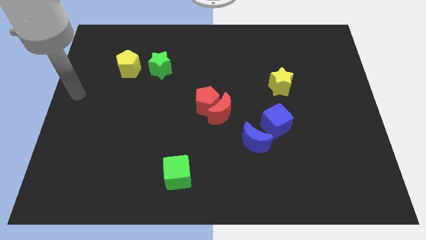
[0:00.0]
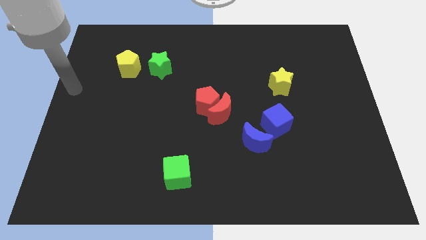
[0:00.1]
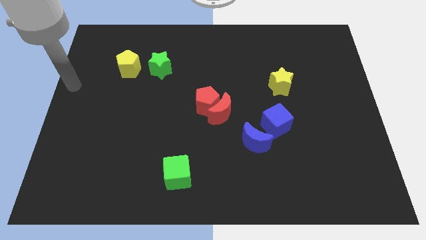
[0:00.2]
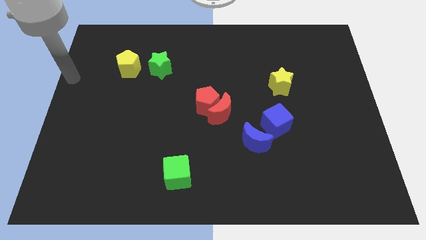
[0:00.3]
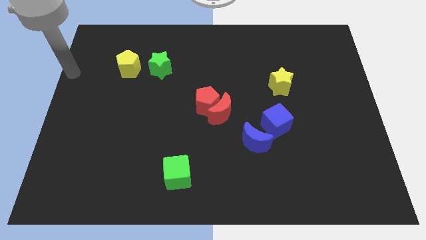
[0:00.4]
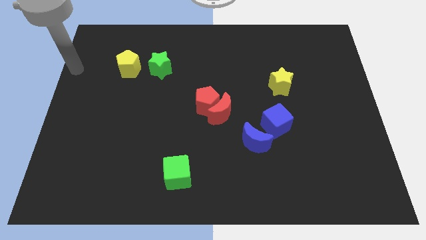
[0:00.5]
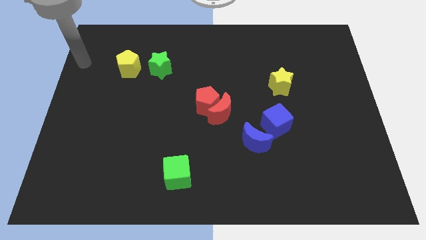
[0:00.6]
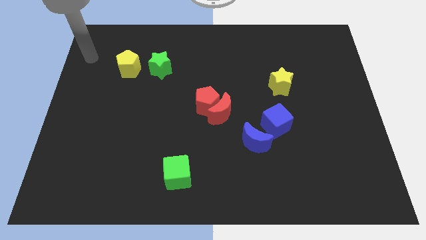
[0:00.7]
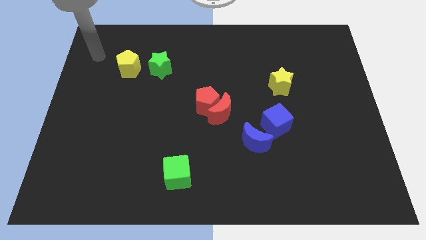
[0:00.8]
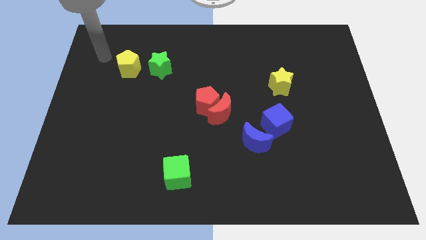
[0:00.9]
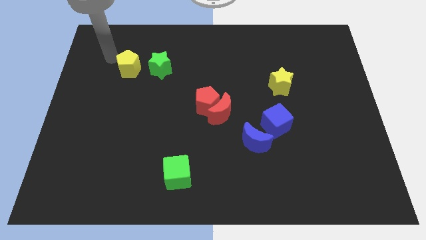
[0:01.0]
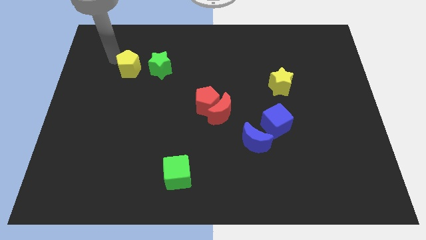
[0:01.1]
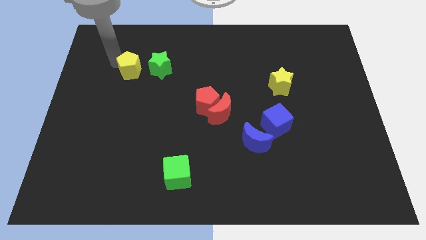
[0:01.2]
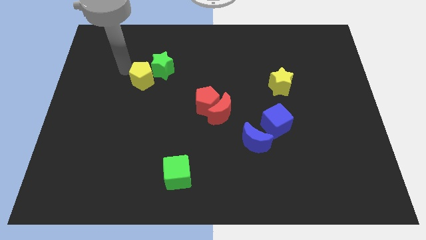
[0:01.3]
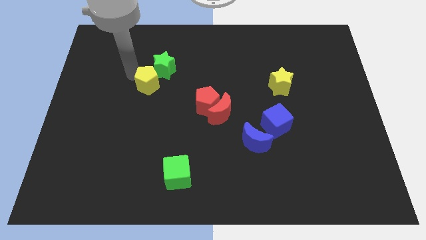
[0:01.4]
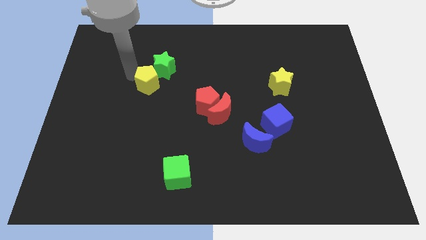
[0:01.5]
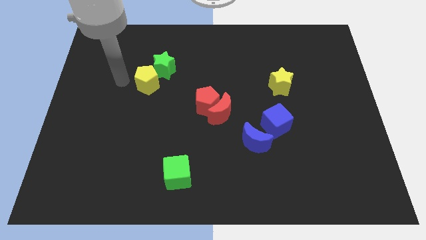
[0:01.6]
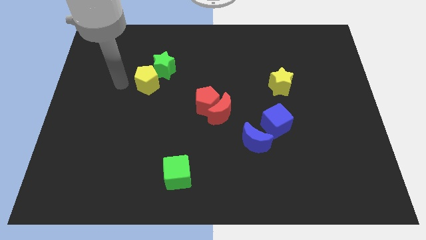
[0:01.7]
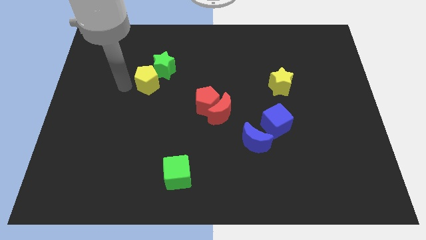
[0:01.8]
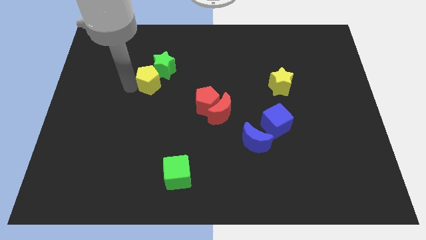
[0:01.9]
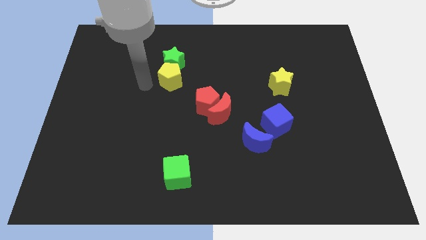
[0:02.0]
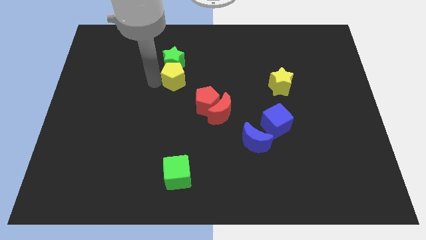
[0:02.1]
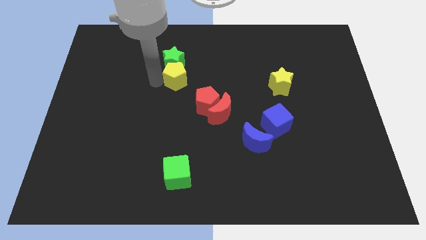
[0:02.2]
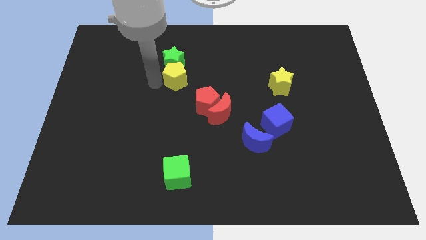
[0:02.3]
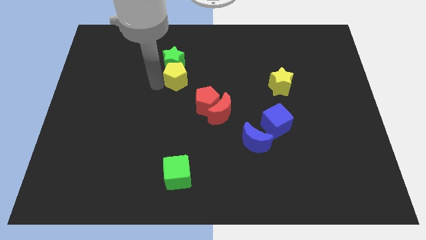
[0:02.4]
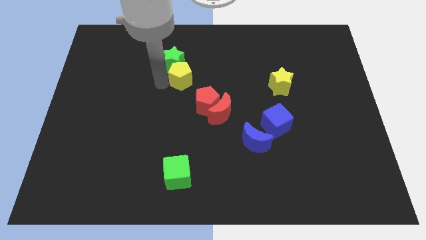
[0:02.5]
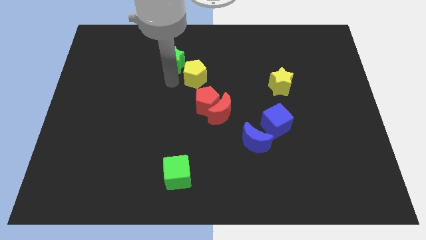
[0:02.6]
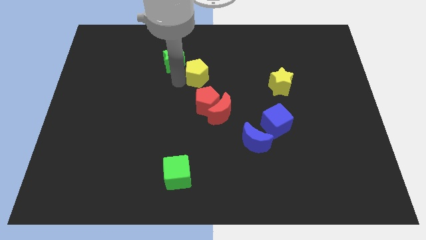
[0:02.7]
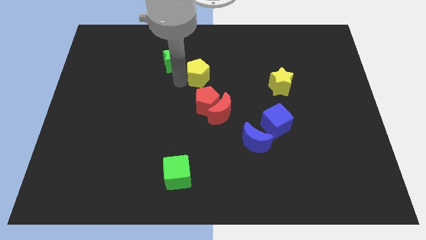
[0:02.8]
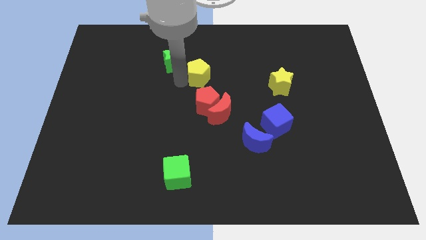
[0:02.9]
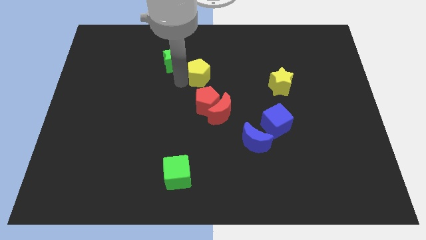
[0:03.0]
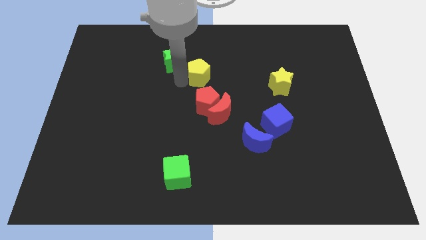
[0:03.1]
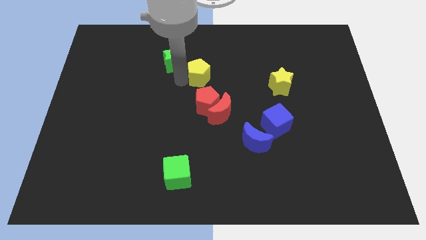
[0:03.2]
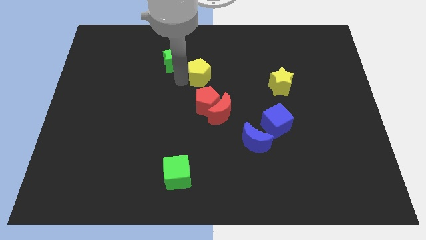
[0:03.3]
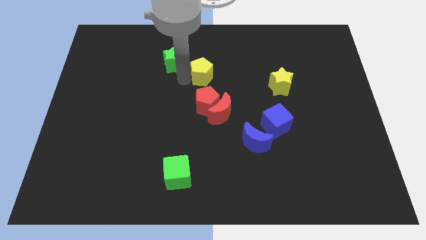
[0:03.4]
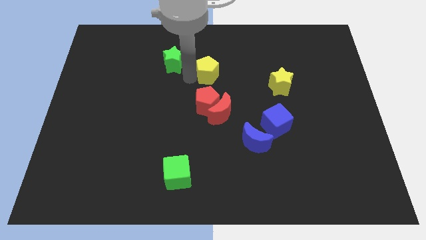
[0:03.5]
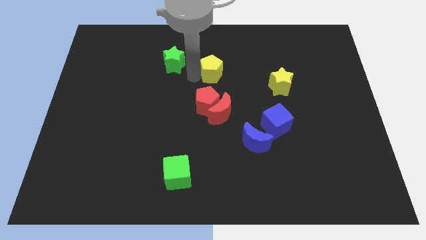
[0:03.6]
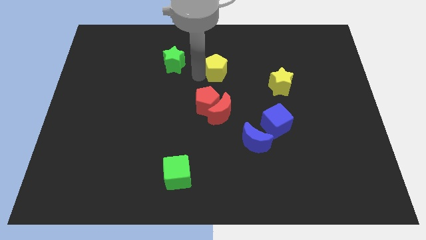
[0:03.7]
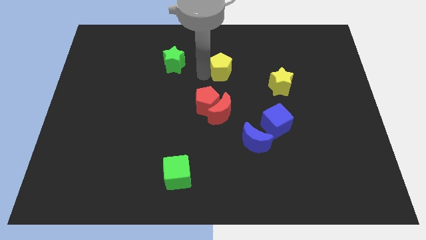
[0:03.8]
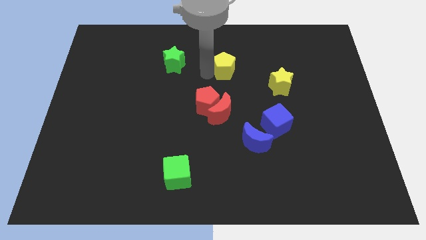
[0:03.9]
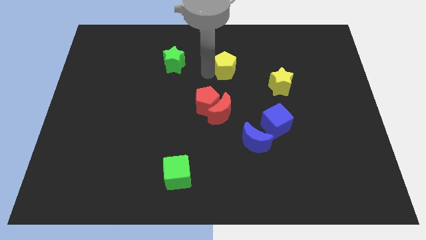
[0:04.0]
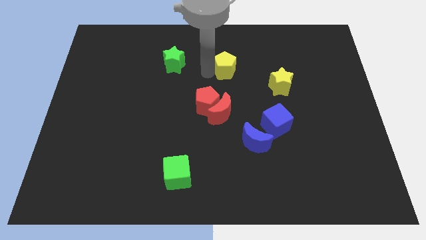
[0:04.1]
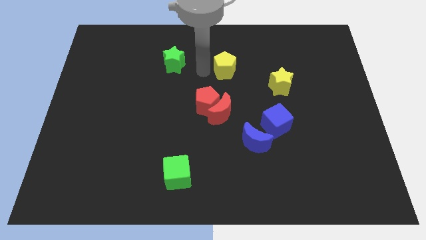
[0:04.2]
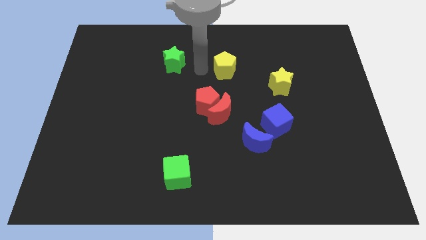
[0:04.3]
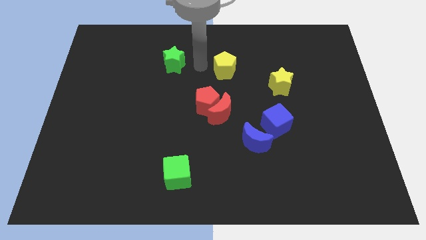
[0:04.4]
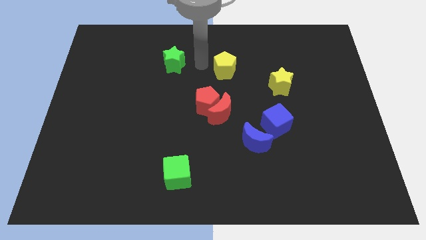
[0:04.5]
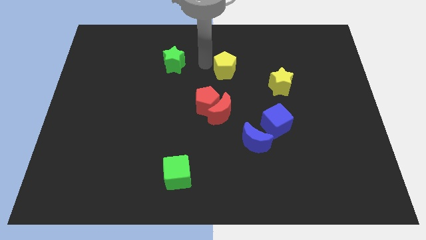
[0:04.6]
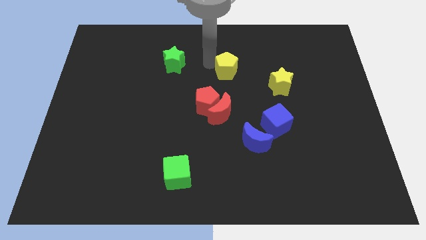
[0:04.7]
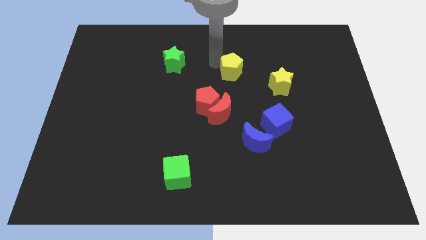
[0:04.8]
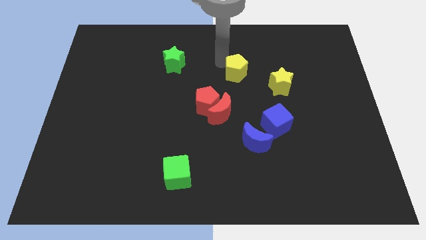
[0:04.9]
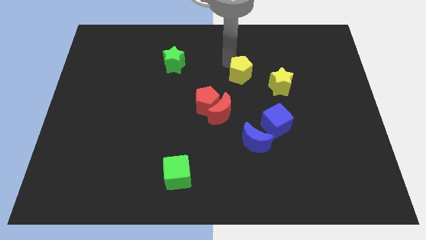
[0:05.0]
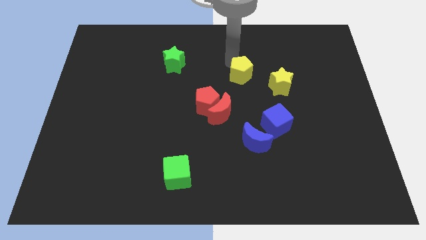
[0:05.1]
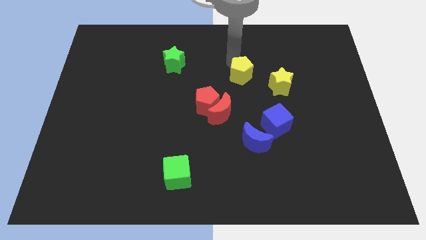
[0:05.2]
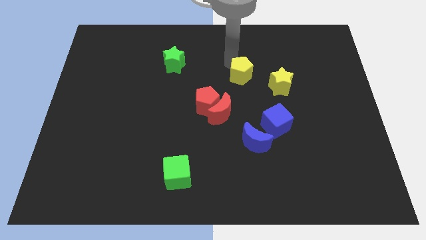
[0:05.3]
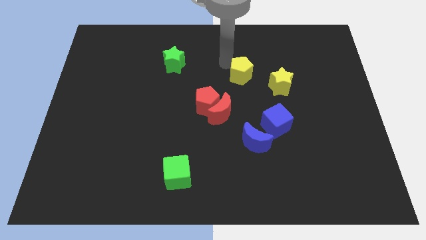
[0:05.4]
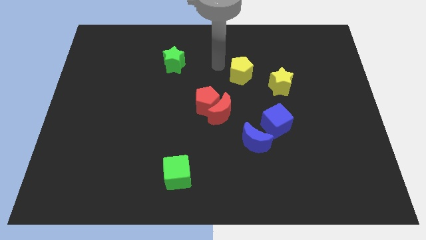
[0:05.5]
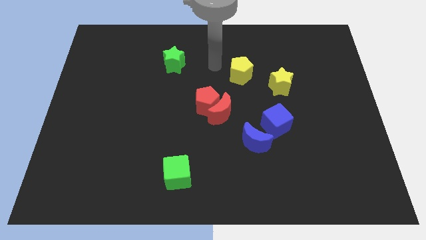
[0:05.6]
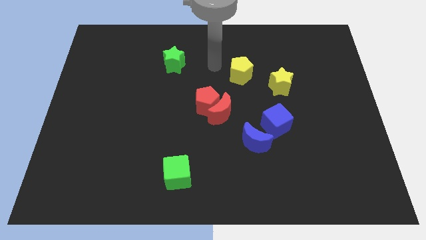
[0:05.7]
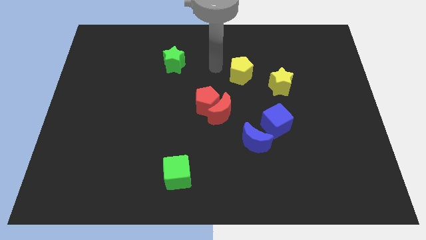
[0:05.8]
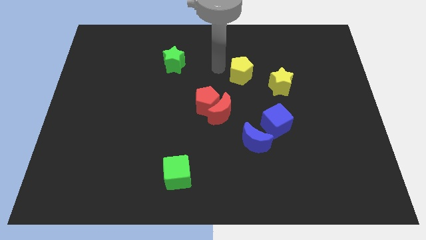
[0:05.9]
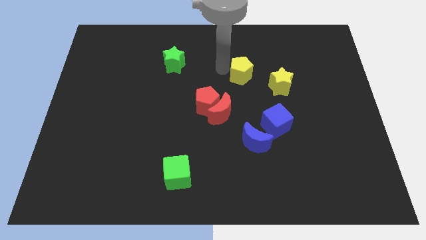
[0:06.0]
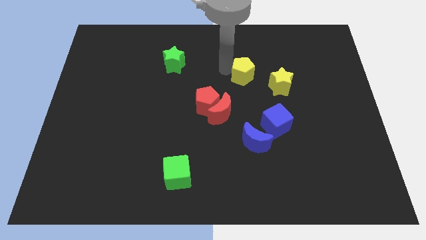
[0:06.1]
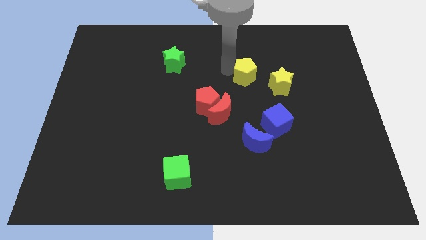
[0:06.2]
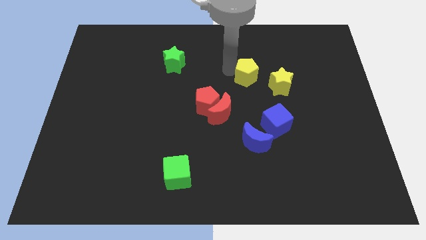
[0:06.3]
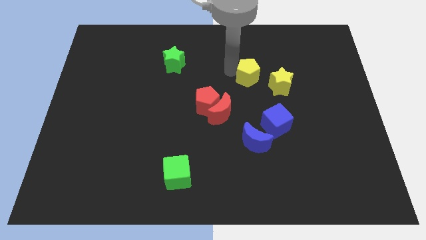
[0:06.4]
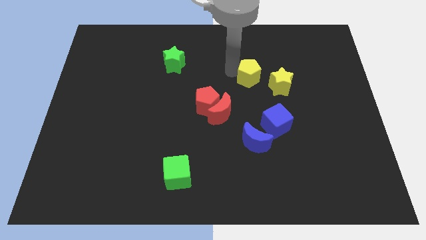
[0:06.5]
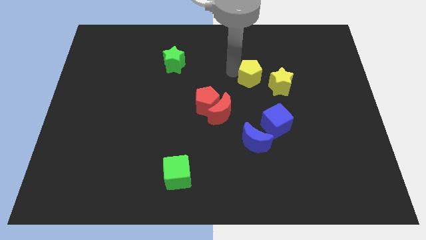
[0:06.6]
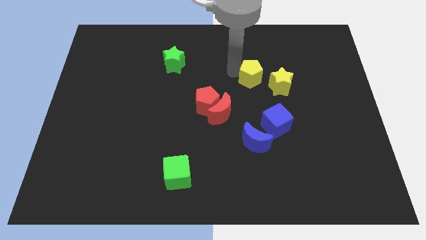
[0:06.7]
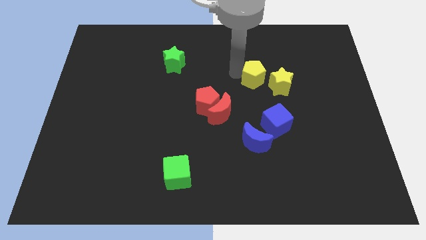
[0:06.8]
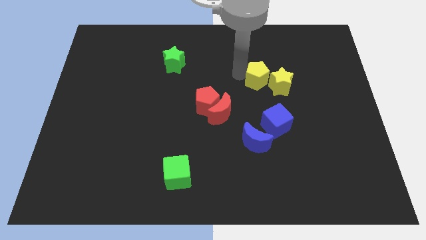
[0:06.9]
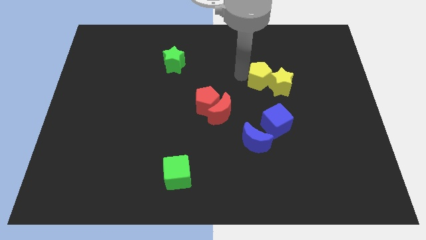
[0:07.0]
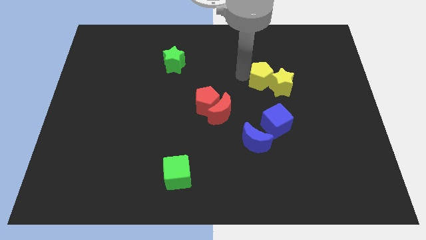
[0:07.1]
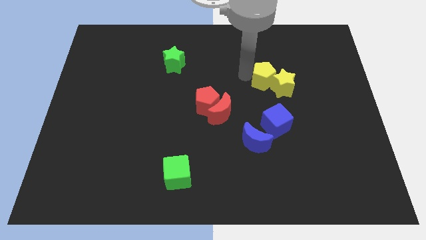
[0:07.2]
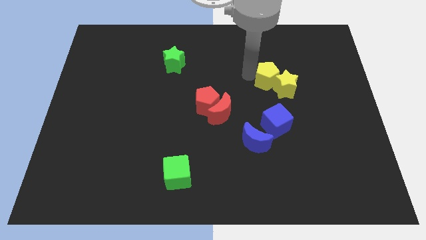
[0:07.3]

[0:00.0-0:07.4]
move the yellow pentagon to the left of the yellow star

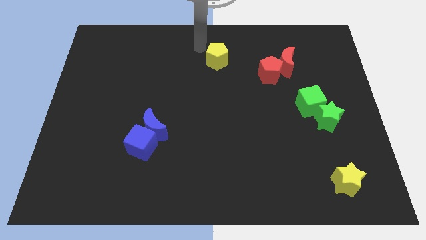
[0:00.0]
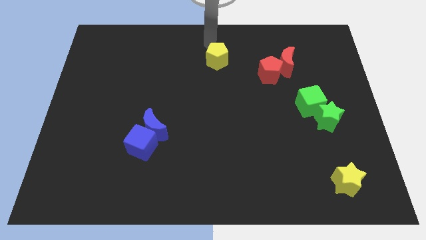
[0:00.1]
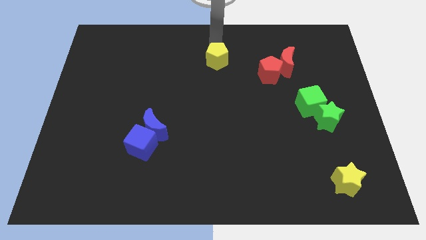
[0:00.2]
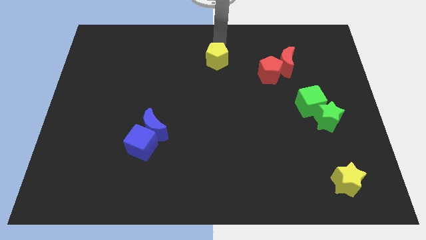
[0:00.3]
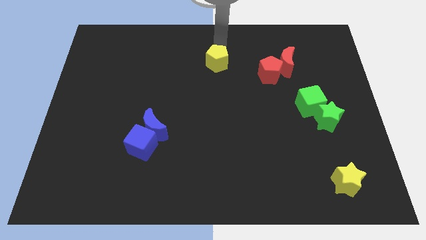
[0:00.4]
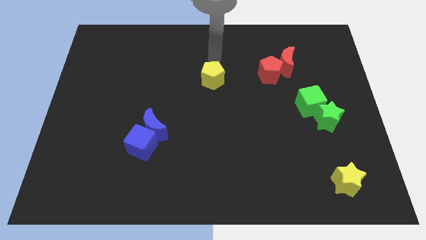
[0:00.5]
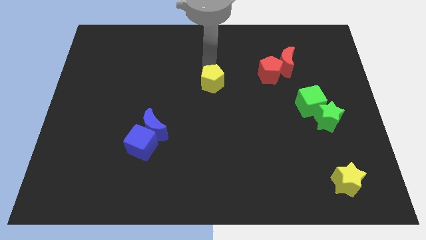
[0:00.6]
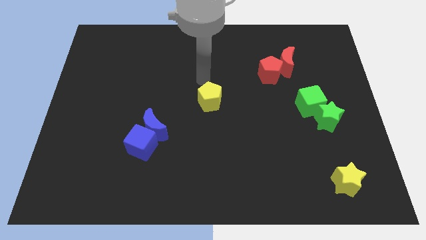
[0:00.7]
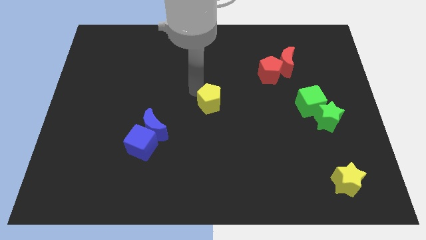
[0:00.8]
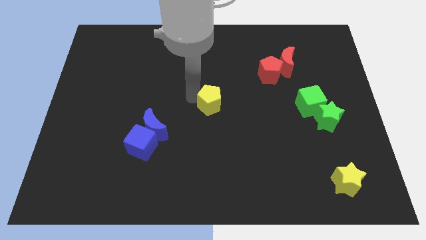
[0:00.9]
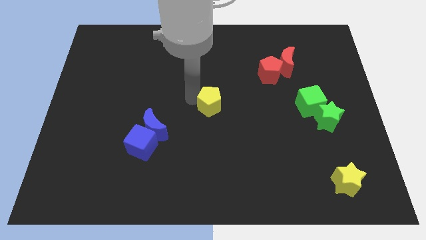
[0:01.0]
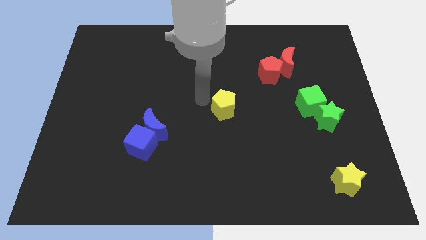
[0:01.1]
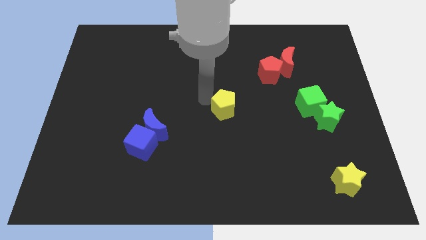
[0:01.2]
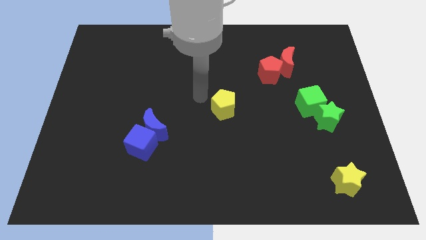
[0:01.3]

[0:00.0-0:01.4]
move the yellow pentagon to the bottom left of the red pentagon

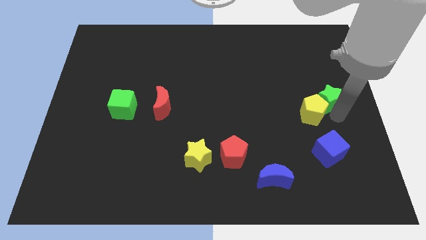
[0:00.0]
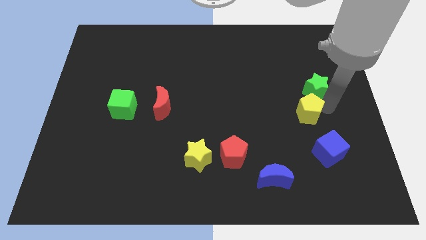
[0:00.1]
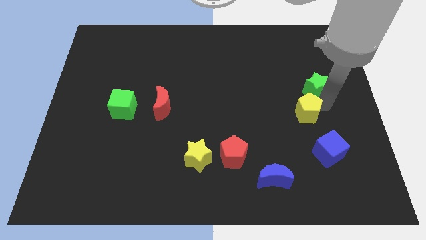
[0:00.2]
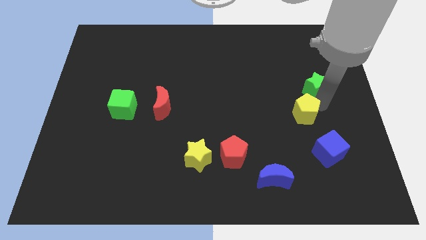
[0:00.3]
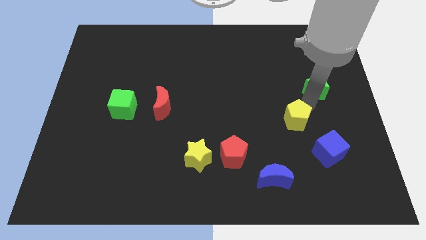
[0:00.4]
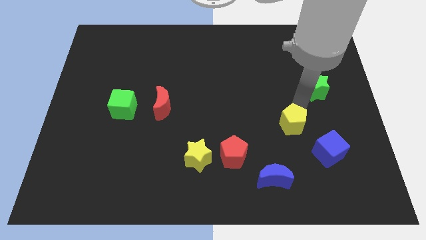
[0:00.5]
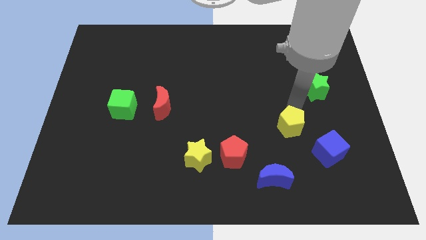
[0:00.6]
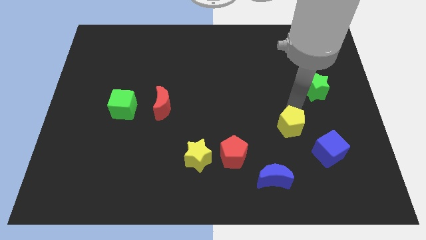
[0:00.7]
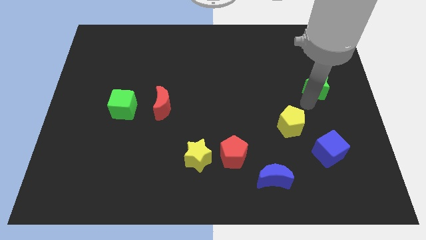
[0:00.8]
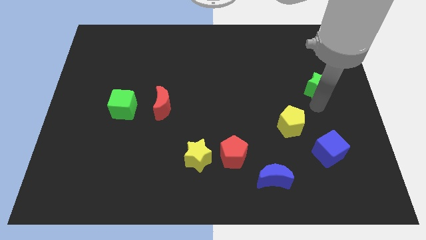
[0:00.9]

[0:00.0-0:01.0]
move the yellow pentagon away from the green star
